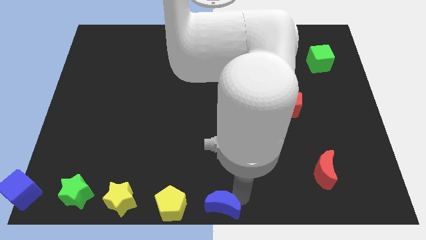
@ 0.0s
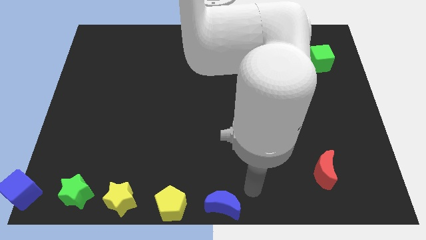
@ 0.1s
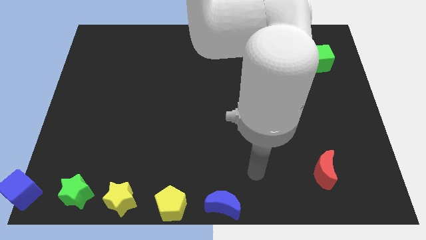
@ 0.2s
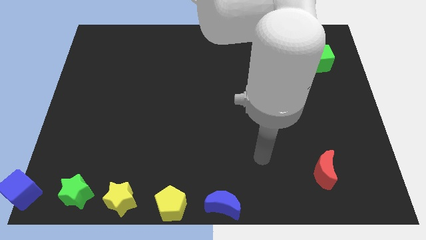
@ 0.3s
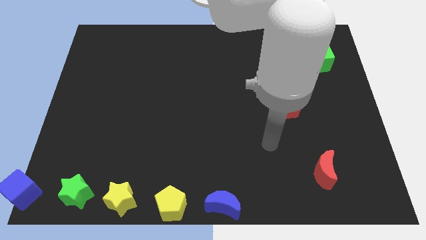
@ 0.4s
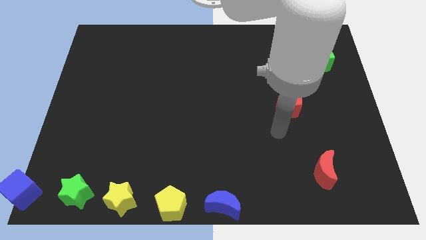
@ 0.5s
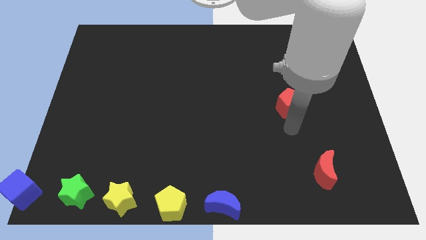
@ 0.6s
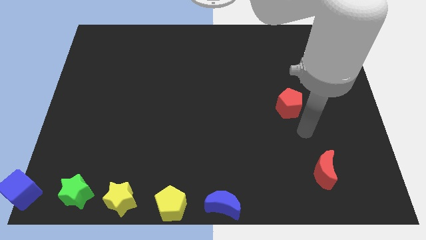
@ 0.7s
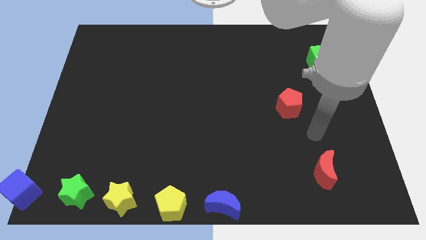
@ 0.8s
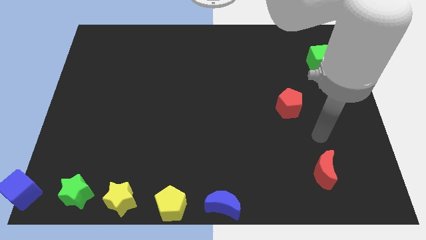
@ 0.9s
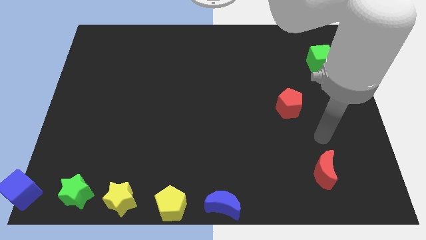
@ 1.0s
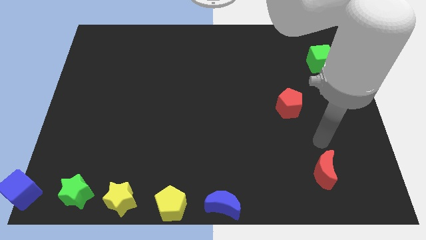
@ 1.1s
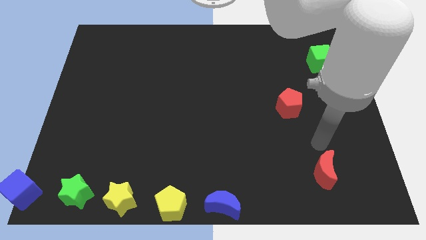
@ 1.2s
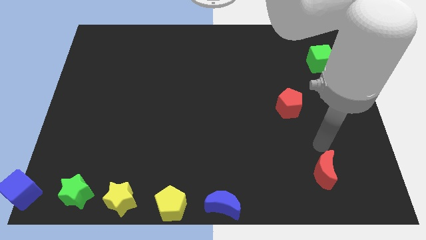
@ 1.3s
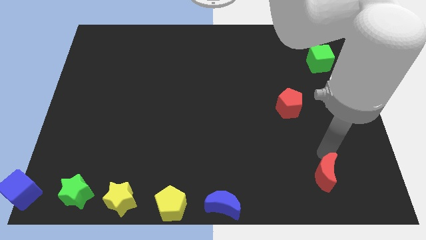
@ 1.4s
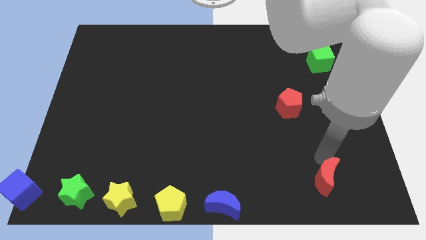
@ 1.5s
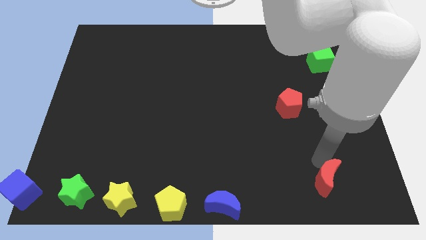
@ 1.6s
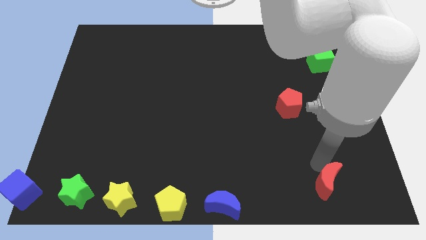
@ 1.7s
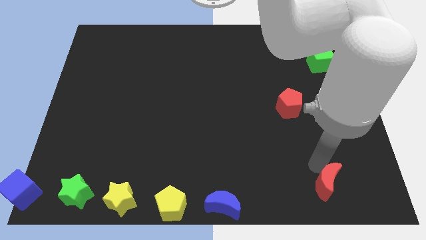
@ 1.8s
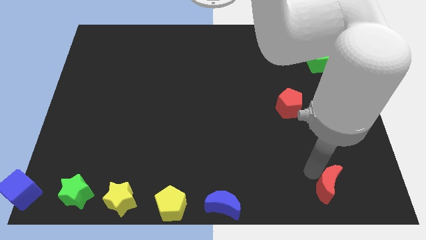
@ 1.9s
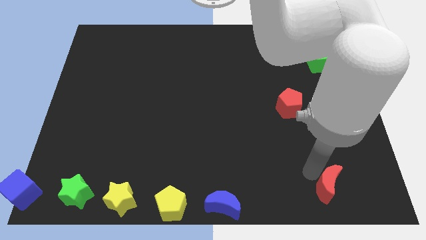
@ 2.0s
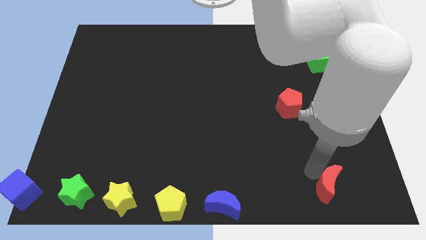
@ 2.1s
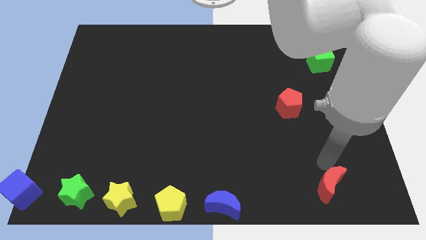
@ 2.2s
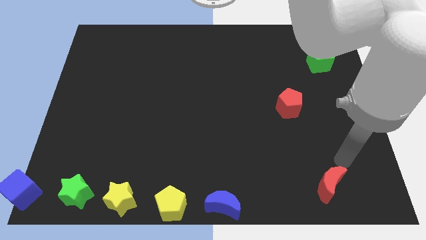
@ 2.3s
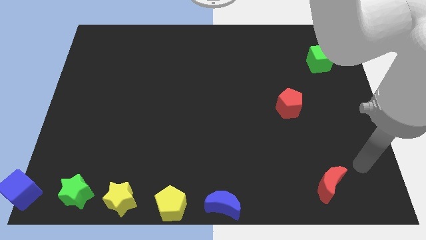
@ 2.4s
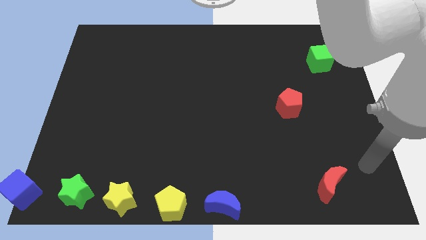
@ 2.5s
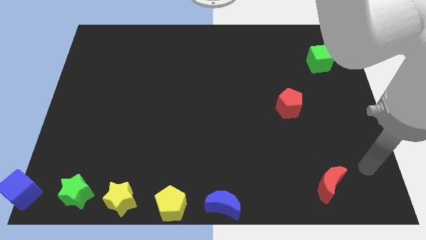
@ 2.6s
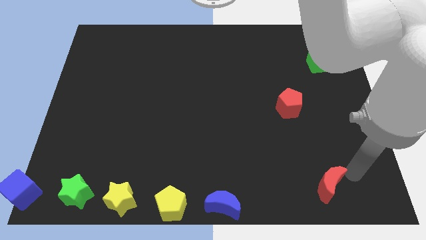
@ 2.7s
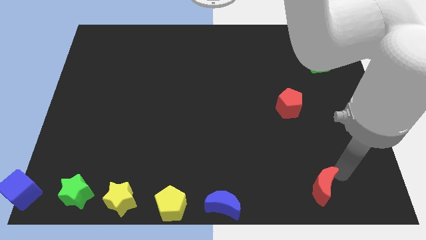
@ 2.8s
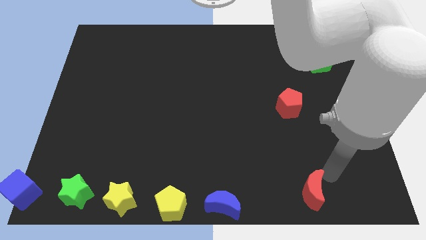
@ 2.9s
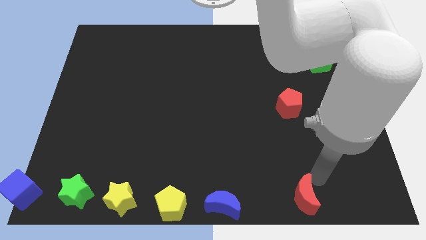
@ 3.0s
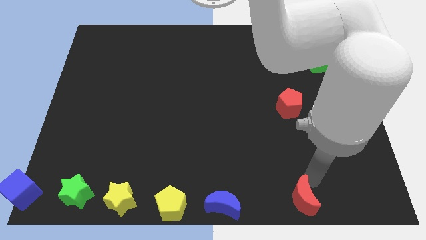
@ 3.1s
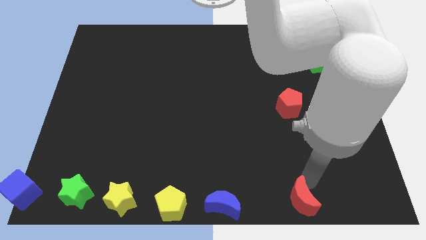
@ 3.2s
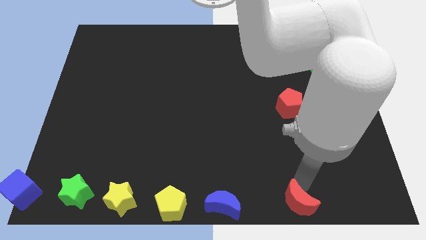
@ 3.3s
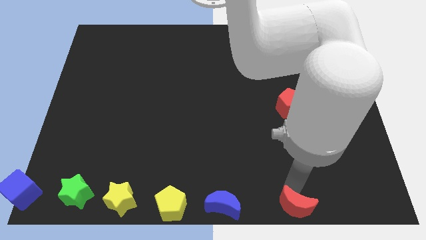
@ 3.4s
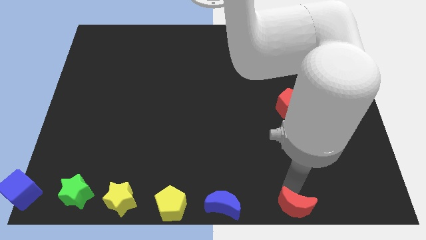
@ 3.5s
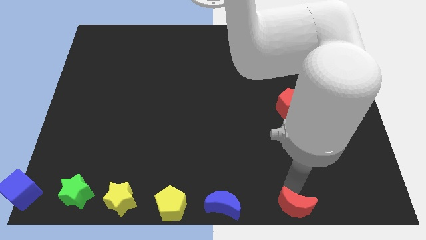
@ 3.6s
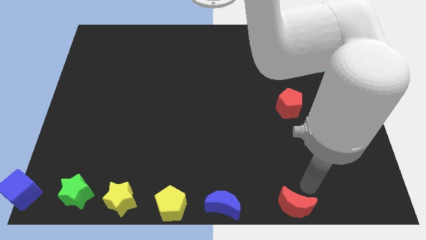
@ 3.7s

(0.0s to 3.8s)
move the red crescent to the bottom side of the table

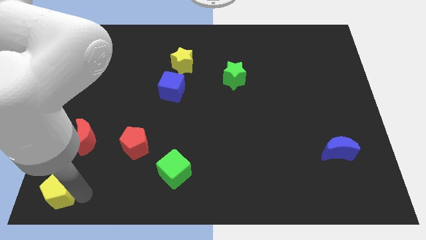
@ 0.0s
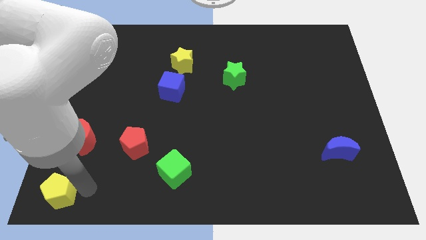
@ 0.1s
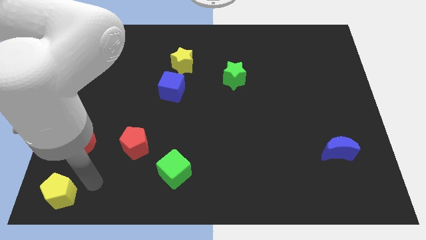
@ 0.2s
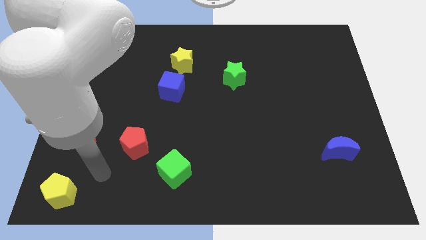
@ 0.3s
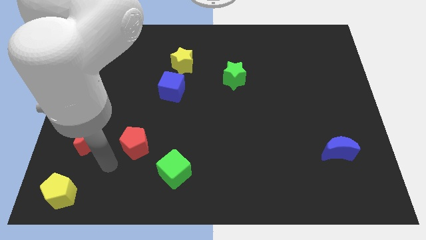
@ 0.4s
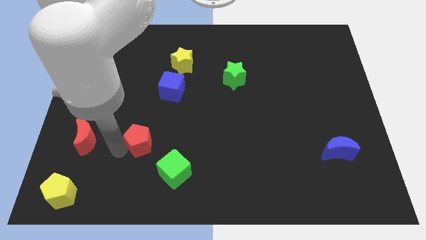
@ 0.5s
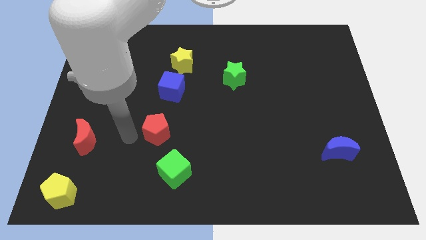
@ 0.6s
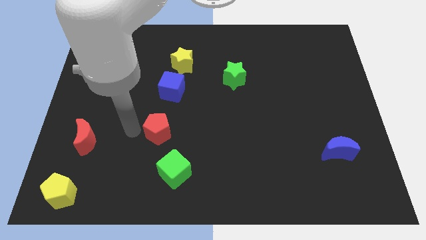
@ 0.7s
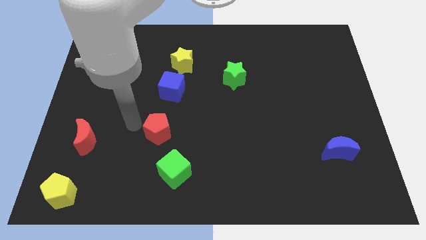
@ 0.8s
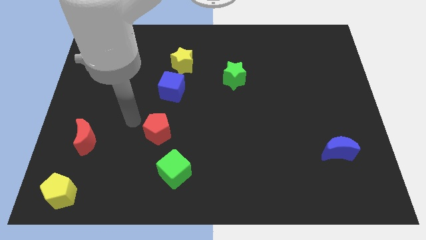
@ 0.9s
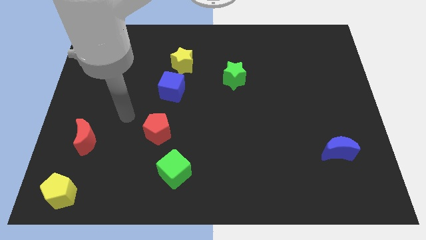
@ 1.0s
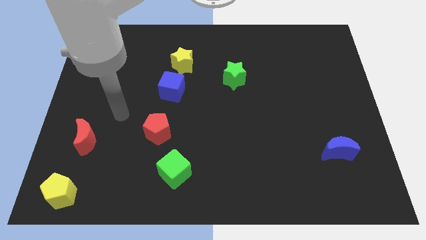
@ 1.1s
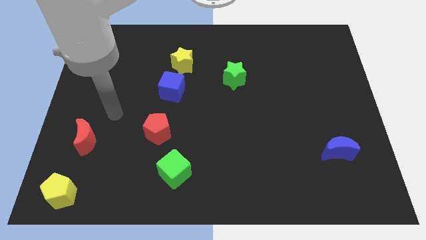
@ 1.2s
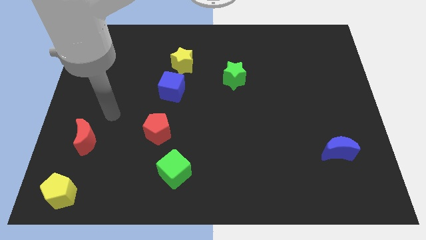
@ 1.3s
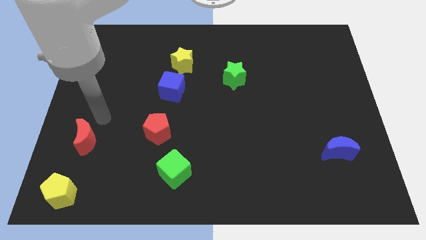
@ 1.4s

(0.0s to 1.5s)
push the red pentagon slightly up

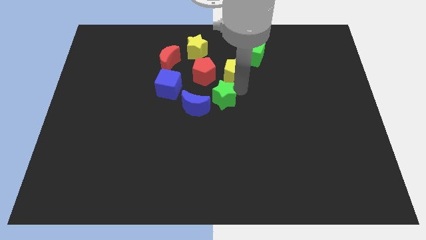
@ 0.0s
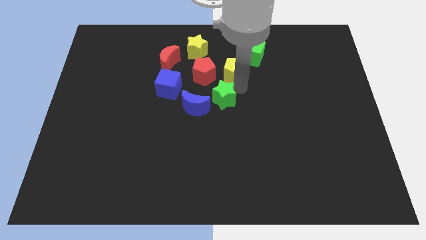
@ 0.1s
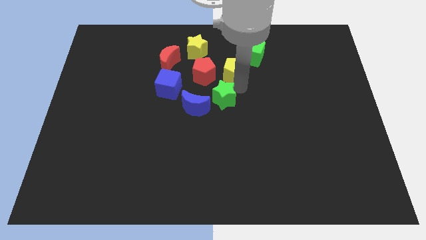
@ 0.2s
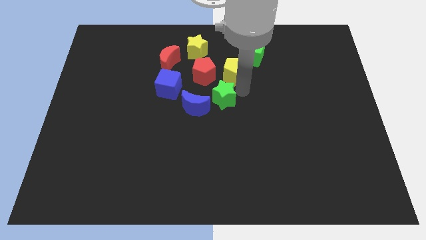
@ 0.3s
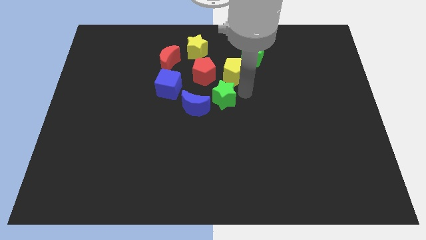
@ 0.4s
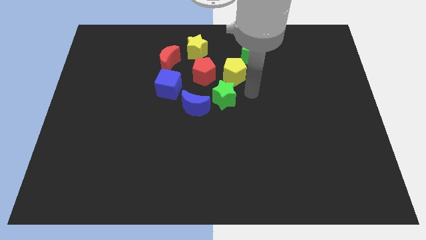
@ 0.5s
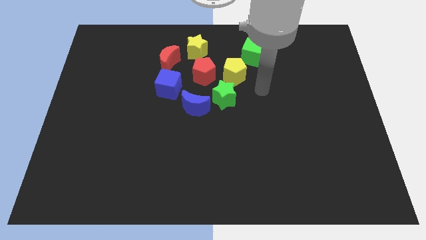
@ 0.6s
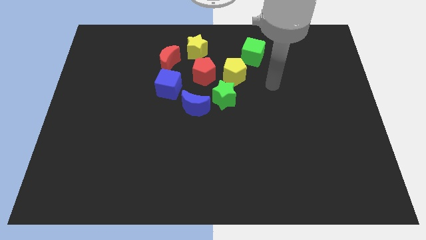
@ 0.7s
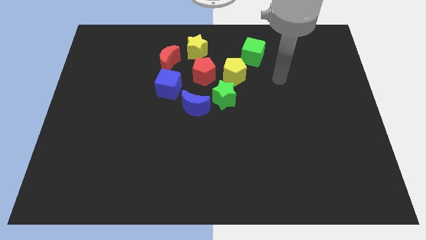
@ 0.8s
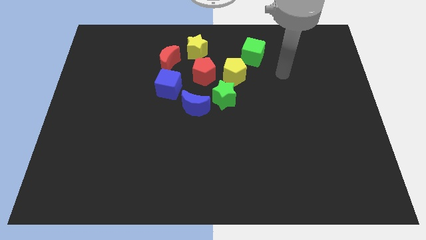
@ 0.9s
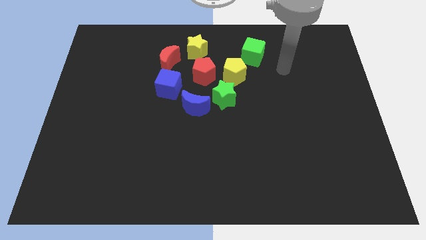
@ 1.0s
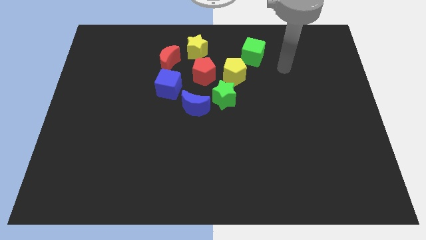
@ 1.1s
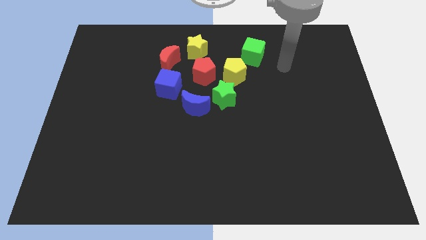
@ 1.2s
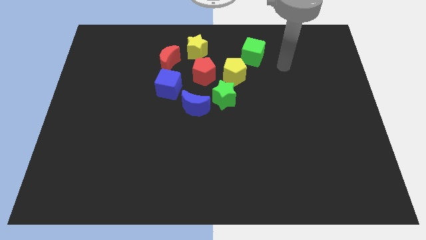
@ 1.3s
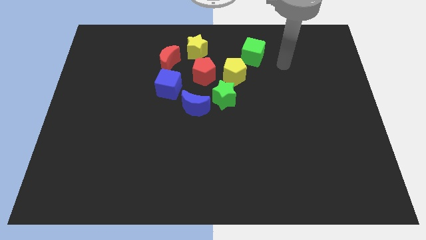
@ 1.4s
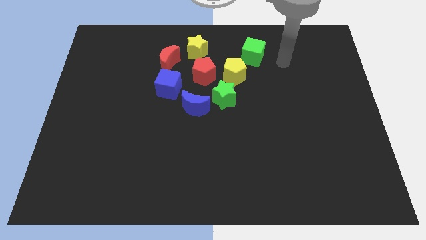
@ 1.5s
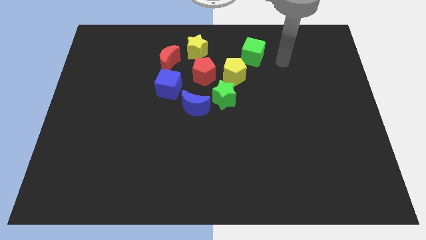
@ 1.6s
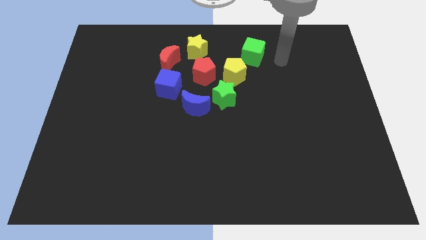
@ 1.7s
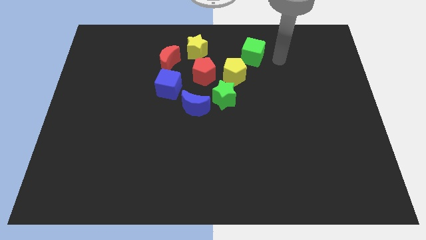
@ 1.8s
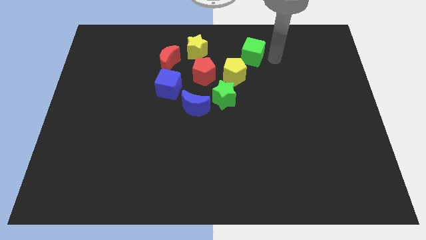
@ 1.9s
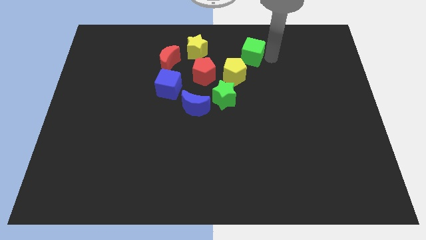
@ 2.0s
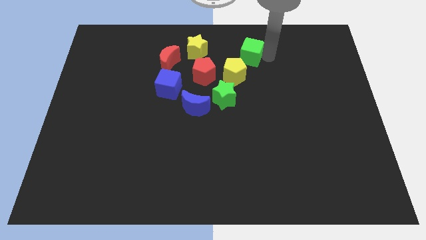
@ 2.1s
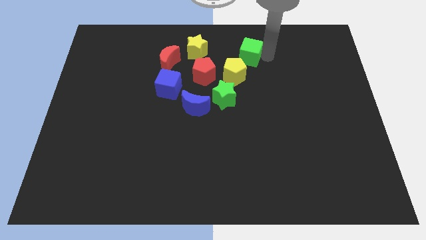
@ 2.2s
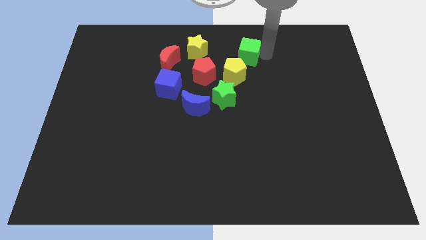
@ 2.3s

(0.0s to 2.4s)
place the arm right to the green cube

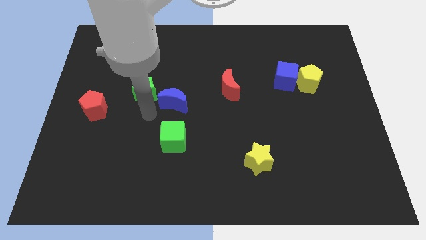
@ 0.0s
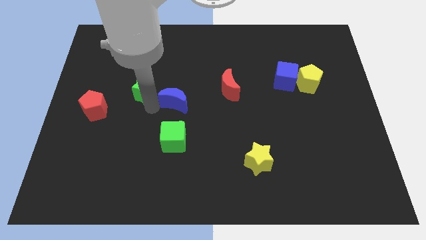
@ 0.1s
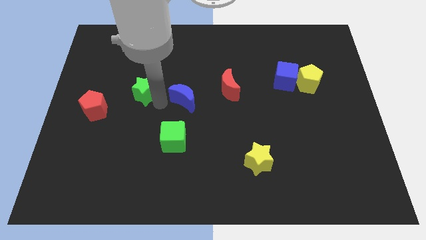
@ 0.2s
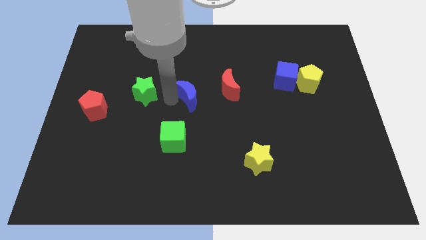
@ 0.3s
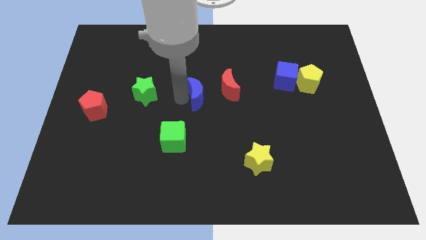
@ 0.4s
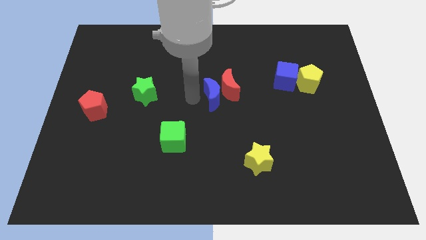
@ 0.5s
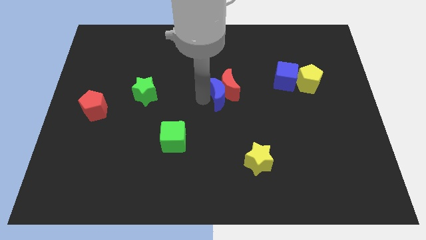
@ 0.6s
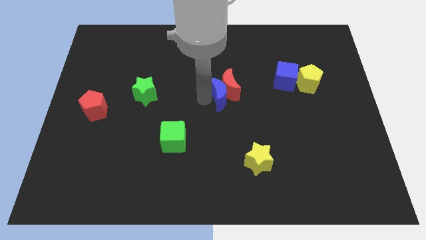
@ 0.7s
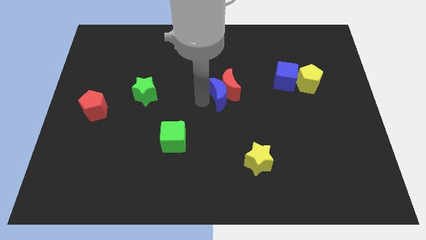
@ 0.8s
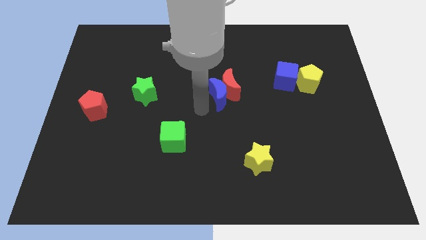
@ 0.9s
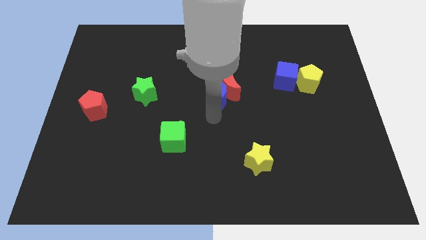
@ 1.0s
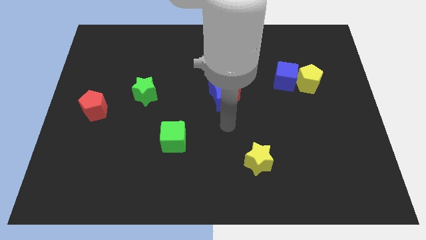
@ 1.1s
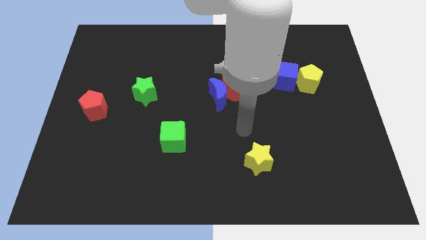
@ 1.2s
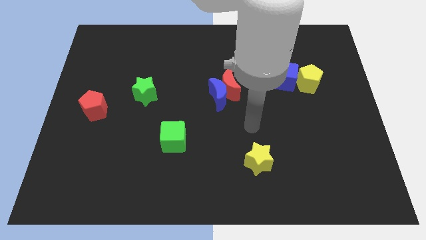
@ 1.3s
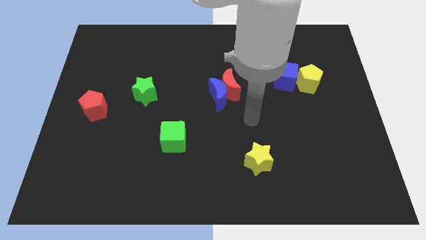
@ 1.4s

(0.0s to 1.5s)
attach the blue moon to the red moon
